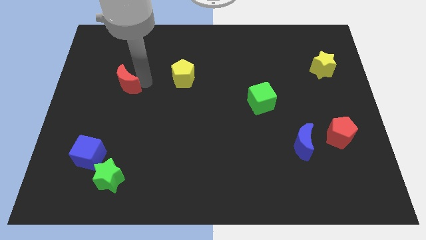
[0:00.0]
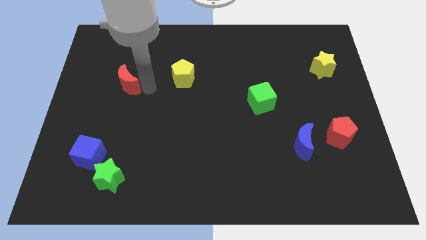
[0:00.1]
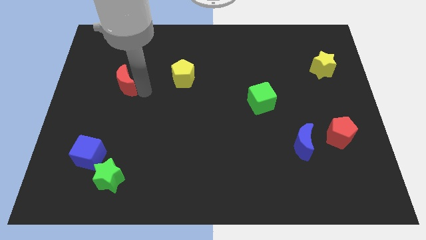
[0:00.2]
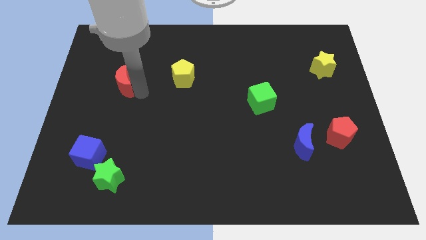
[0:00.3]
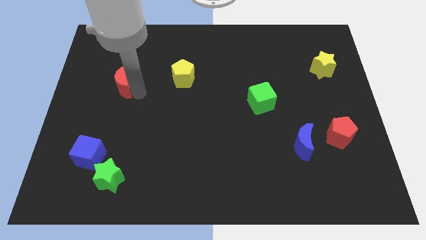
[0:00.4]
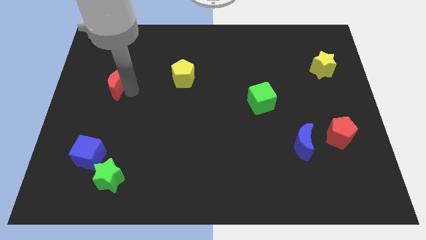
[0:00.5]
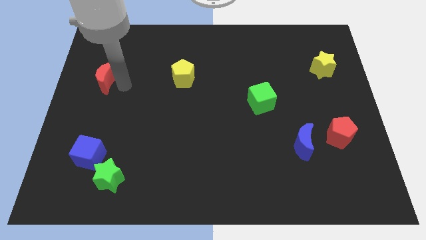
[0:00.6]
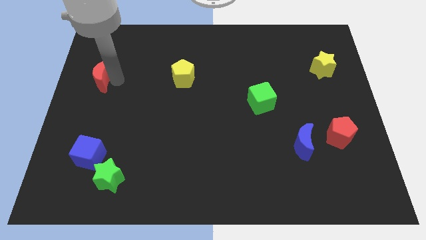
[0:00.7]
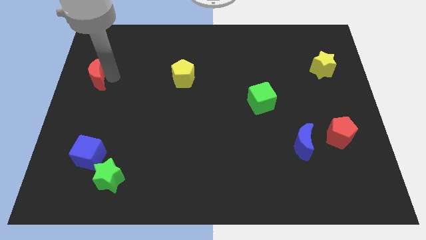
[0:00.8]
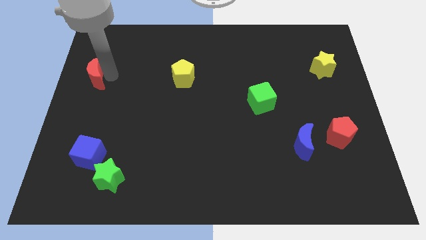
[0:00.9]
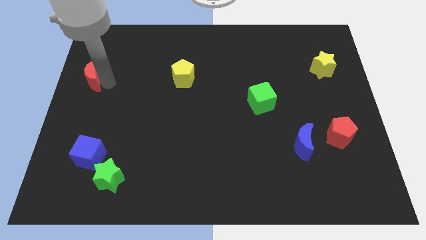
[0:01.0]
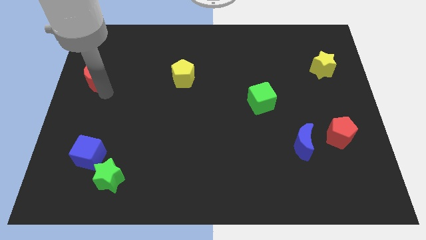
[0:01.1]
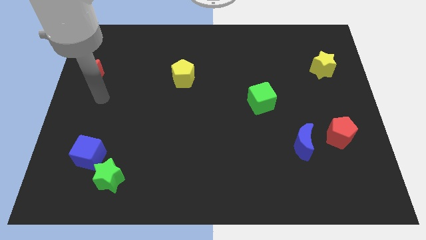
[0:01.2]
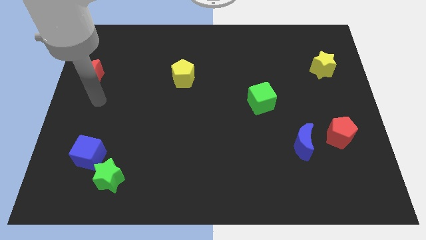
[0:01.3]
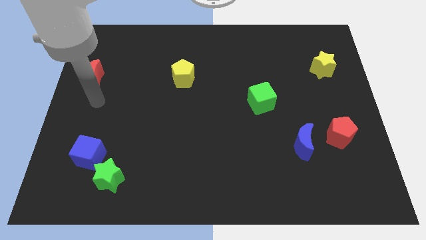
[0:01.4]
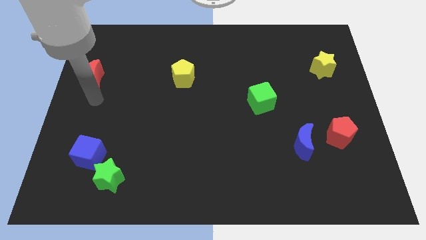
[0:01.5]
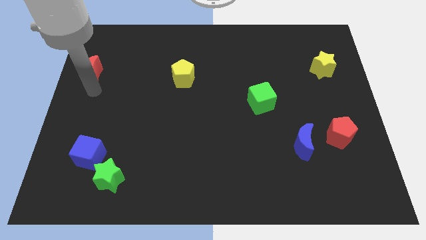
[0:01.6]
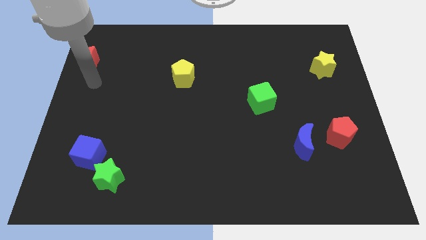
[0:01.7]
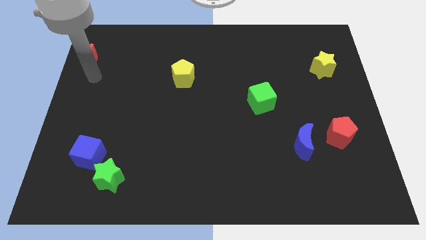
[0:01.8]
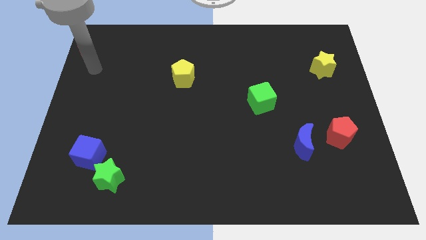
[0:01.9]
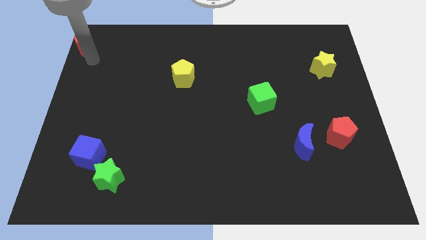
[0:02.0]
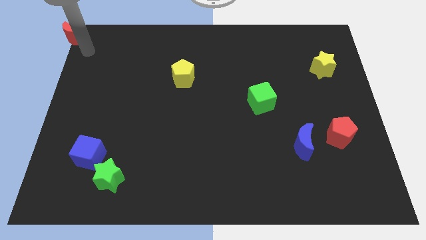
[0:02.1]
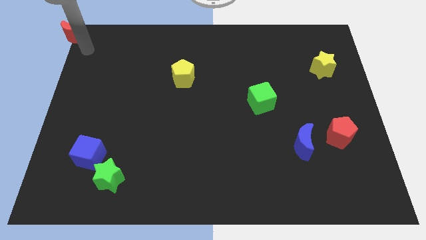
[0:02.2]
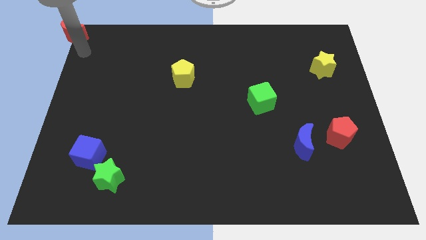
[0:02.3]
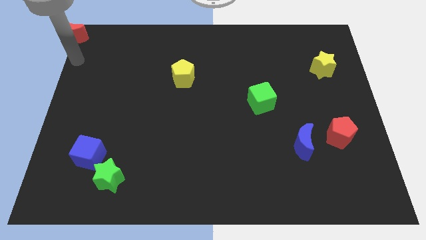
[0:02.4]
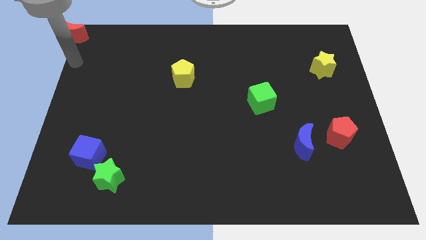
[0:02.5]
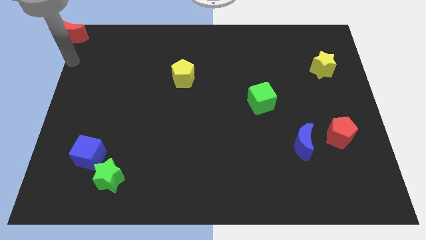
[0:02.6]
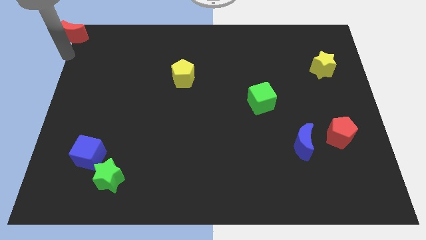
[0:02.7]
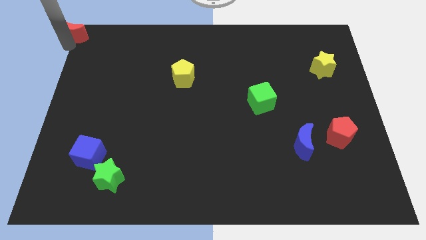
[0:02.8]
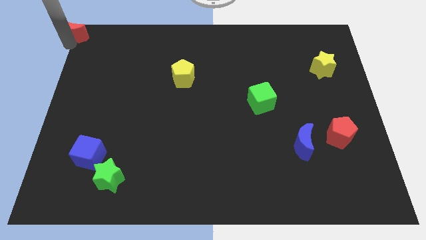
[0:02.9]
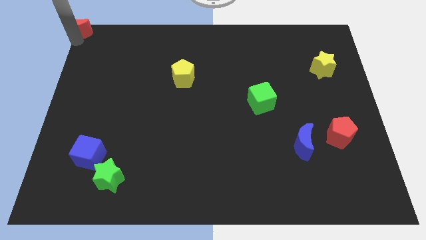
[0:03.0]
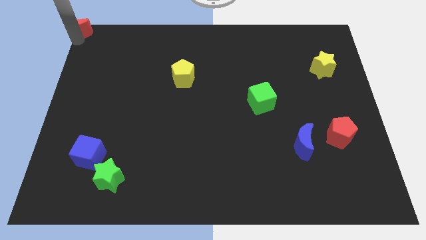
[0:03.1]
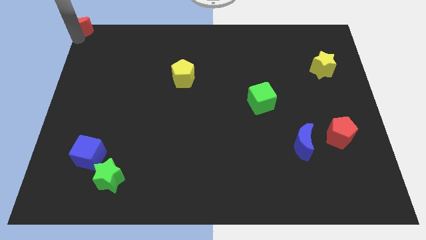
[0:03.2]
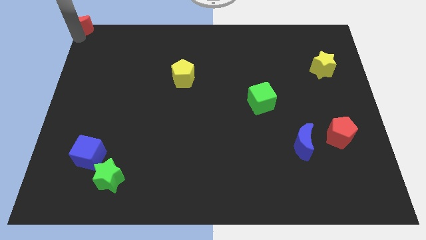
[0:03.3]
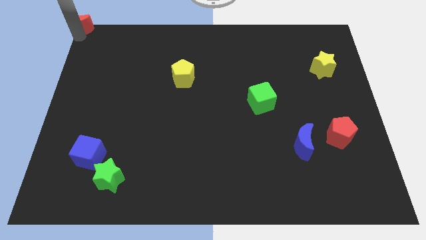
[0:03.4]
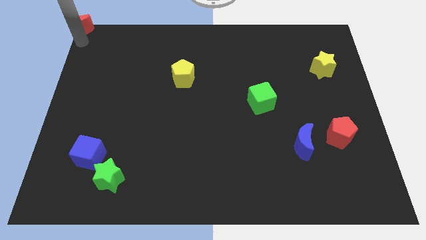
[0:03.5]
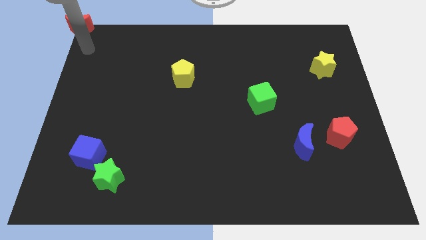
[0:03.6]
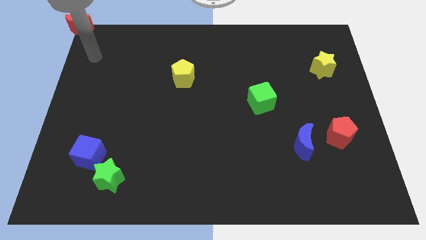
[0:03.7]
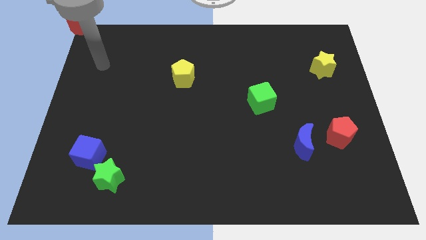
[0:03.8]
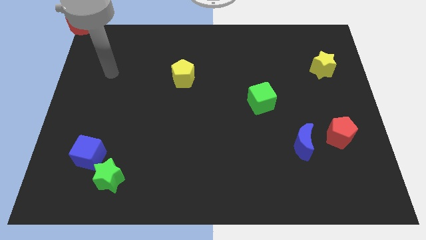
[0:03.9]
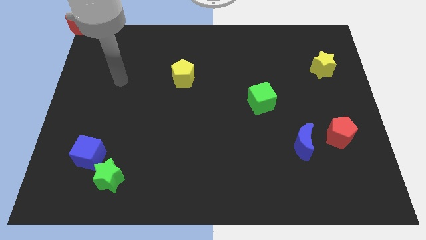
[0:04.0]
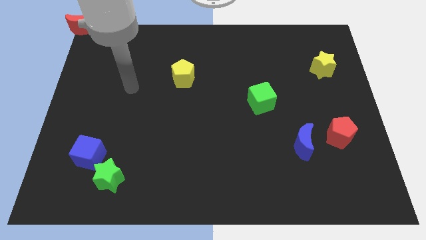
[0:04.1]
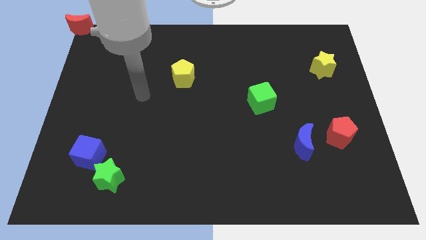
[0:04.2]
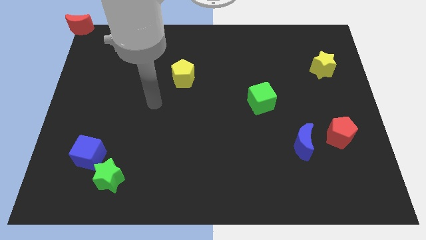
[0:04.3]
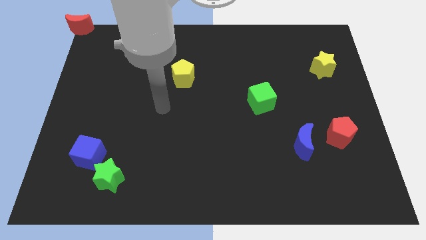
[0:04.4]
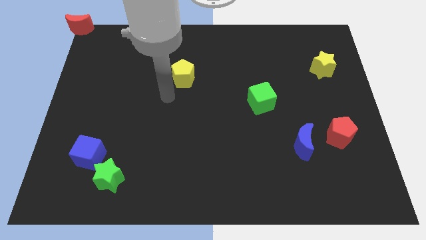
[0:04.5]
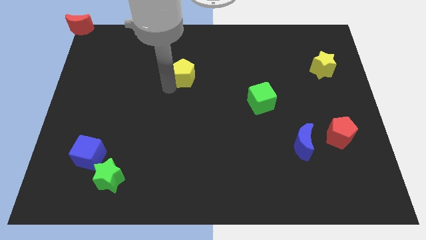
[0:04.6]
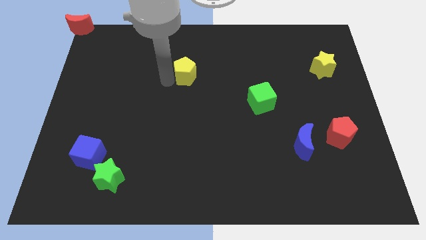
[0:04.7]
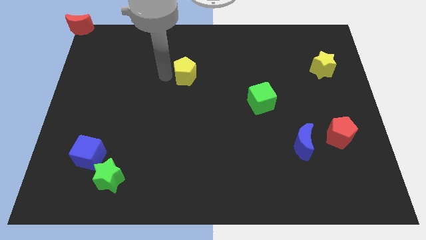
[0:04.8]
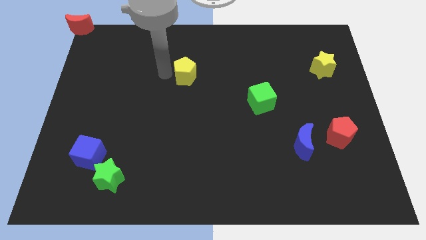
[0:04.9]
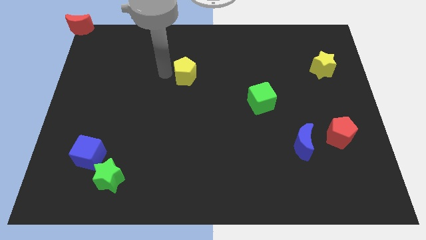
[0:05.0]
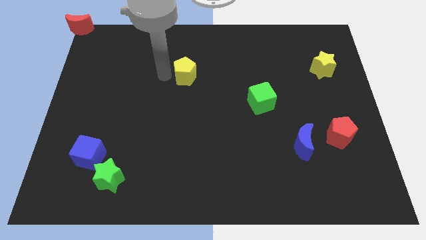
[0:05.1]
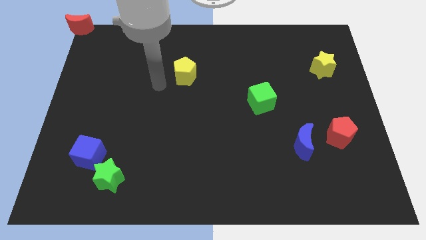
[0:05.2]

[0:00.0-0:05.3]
move red crescent to the top left corner of the board

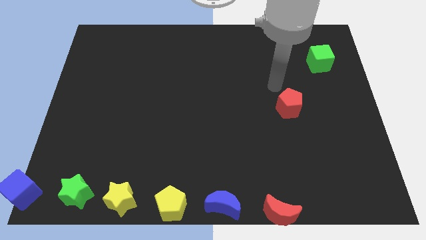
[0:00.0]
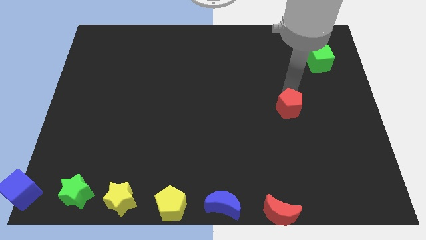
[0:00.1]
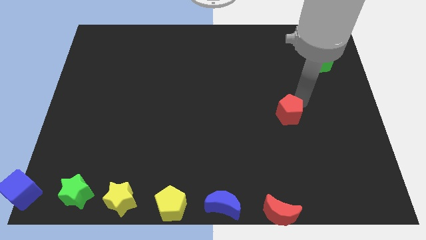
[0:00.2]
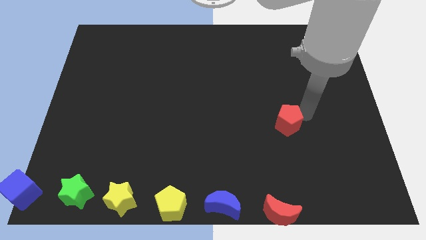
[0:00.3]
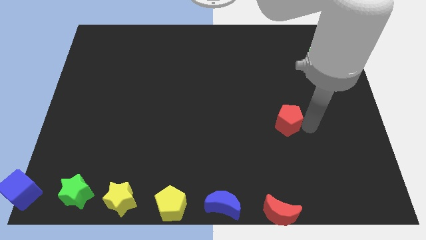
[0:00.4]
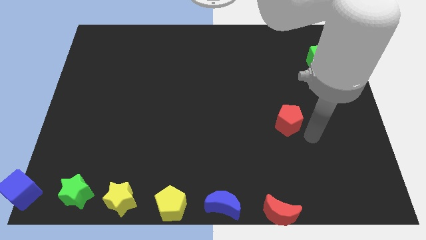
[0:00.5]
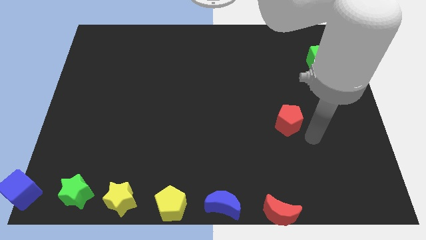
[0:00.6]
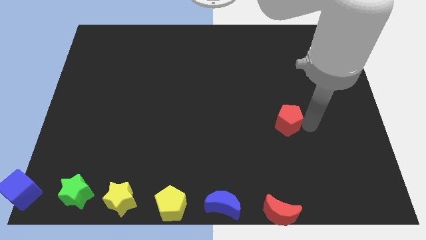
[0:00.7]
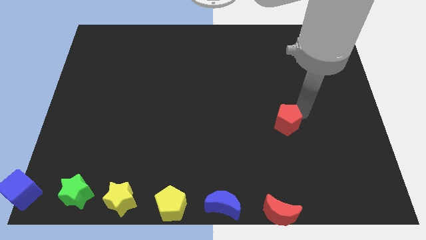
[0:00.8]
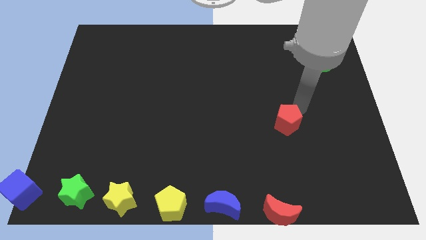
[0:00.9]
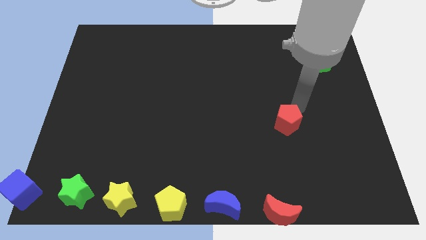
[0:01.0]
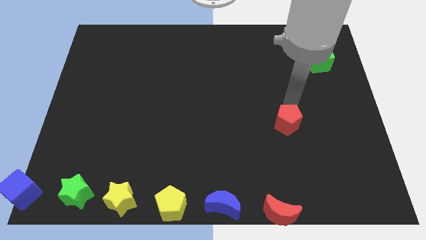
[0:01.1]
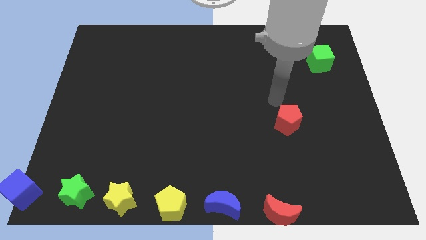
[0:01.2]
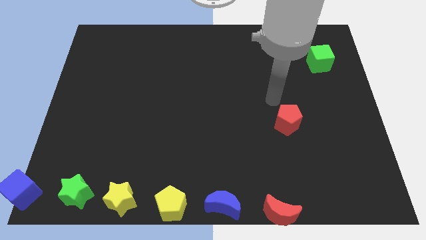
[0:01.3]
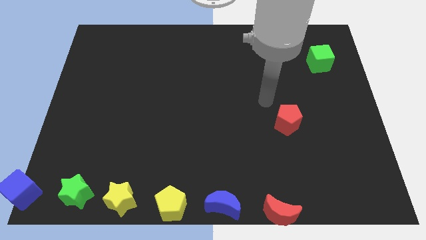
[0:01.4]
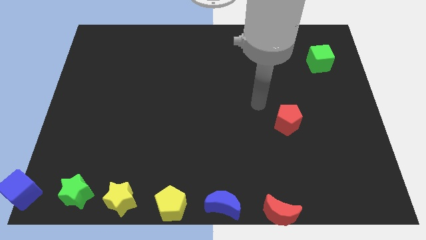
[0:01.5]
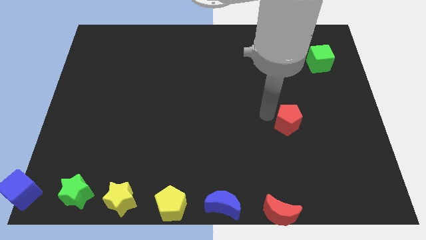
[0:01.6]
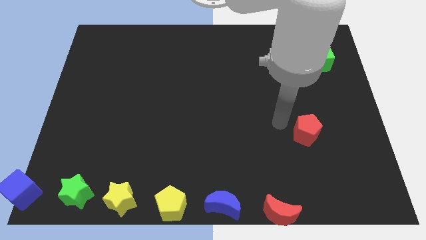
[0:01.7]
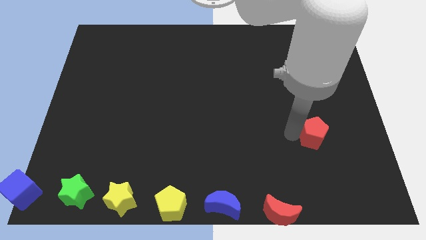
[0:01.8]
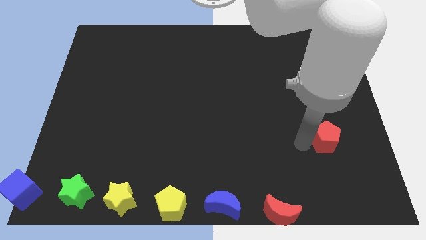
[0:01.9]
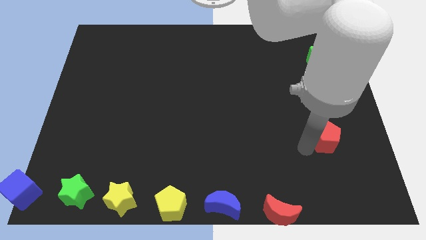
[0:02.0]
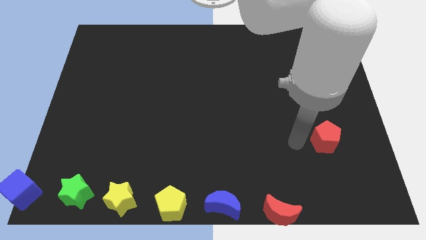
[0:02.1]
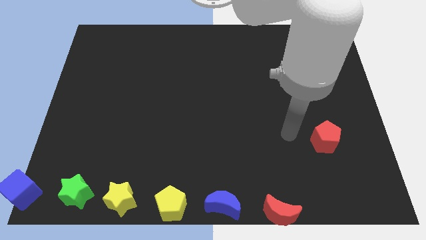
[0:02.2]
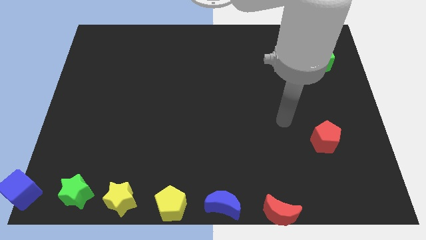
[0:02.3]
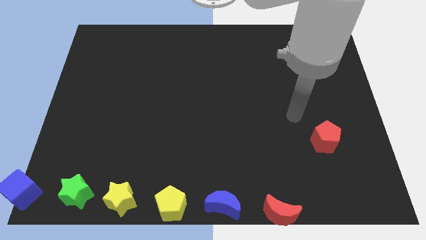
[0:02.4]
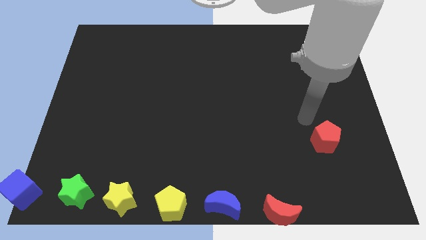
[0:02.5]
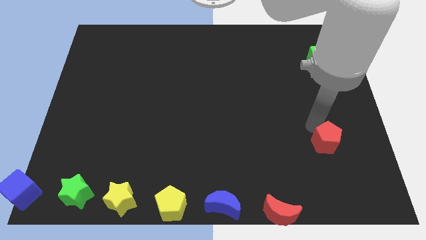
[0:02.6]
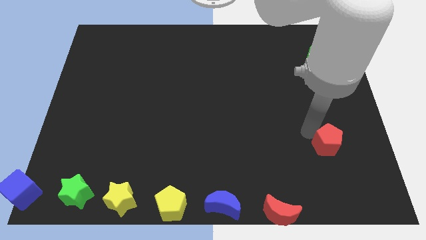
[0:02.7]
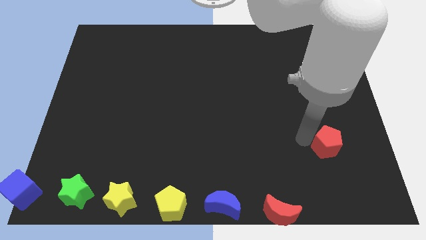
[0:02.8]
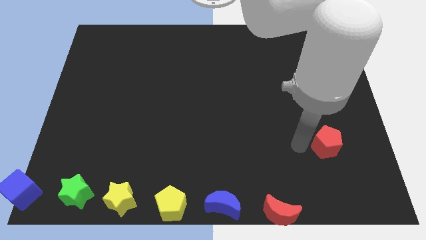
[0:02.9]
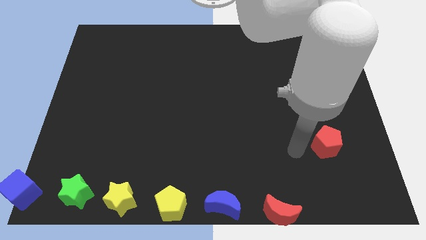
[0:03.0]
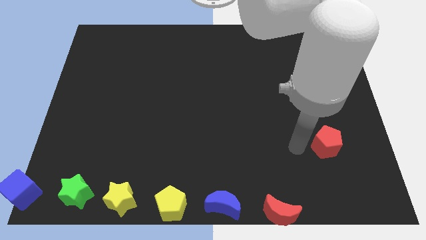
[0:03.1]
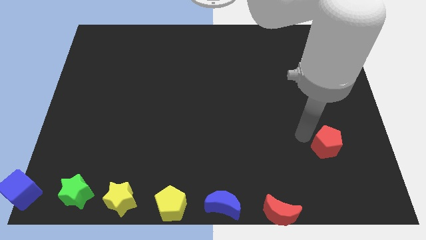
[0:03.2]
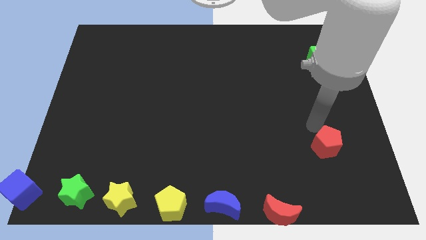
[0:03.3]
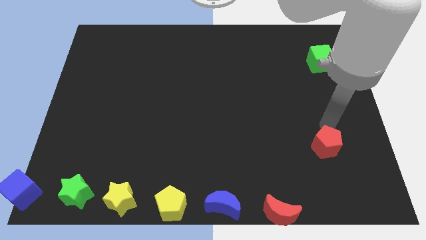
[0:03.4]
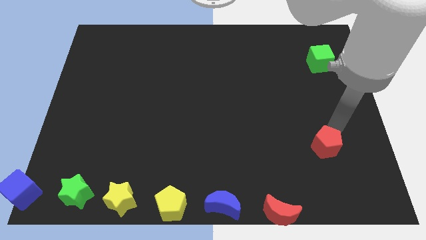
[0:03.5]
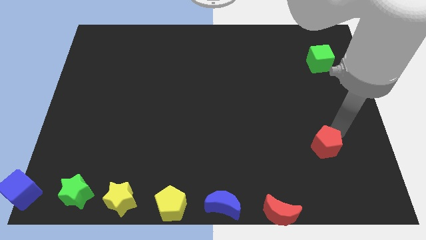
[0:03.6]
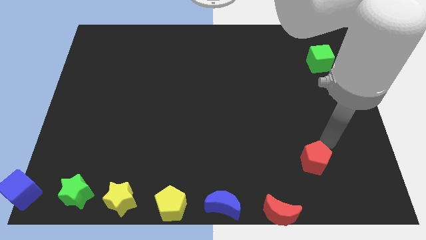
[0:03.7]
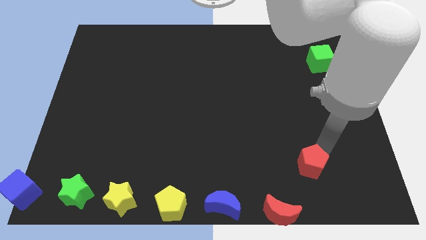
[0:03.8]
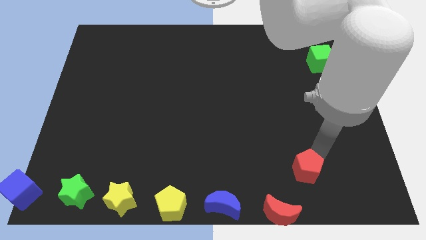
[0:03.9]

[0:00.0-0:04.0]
move the red pentagon towards the top side of the red crescent
